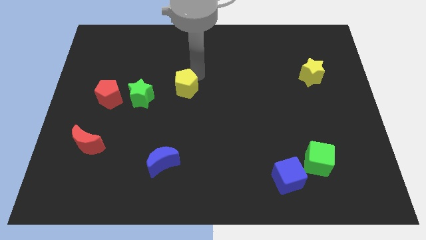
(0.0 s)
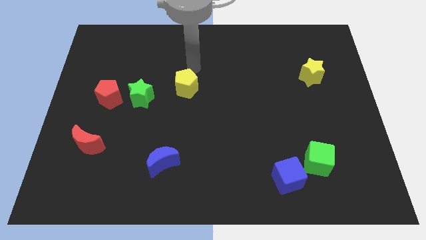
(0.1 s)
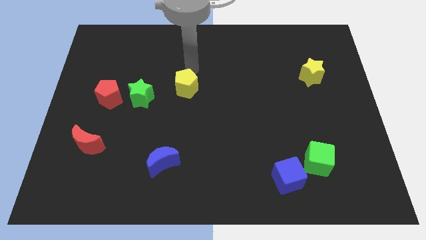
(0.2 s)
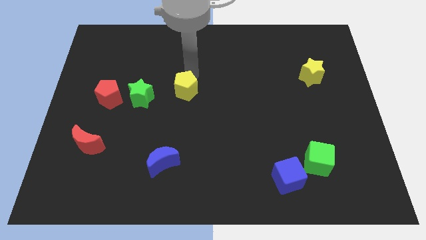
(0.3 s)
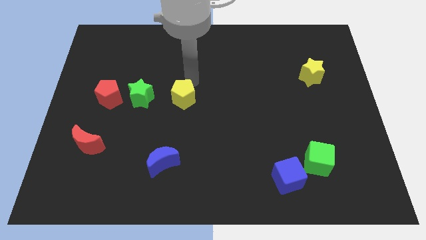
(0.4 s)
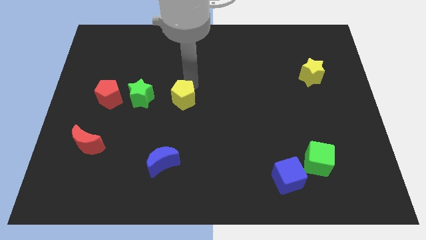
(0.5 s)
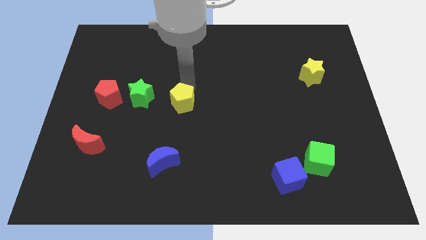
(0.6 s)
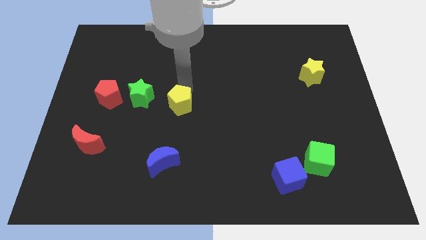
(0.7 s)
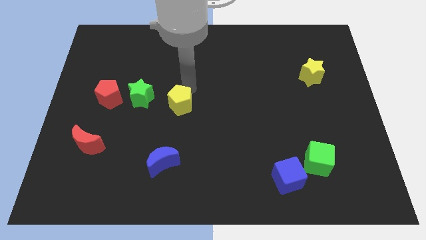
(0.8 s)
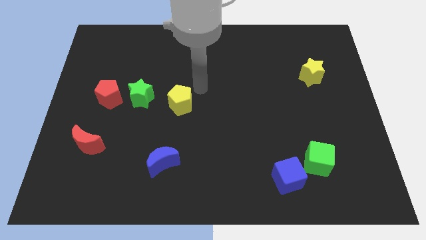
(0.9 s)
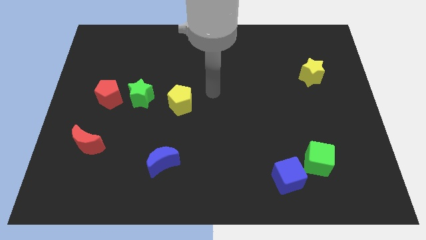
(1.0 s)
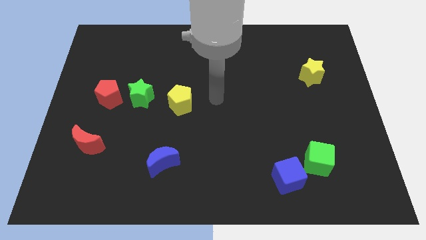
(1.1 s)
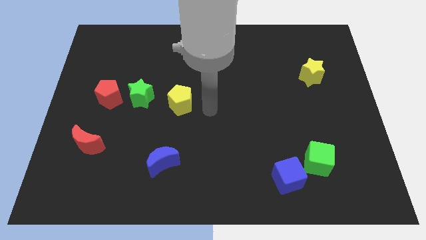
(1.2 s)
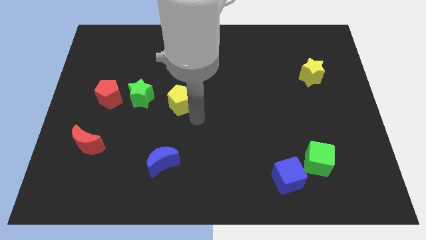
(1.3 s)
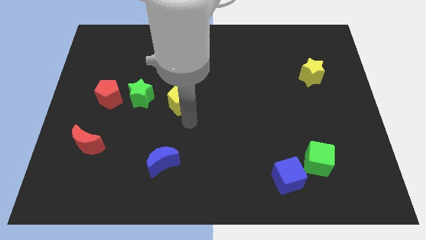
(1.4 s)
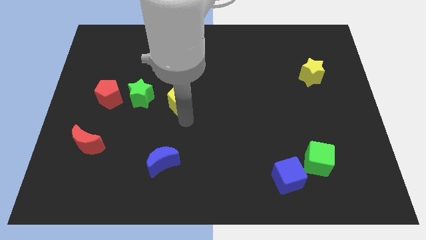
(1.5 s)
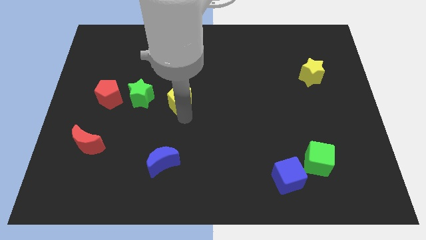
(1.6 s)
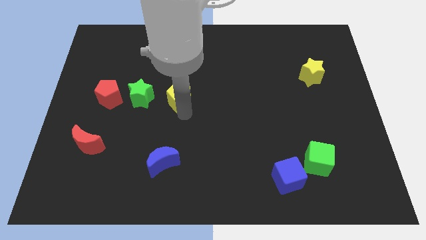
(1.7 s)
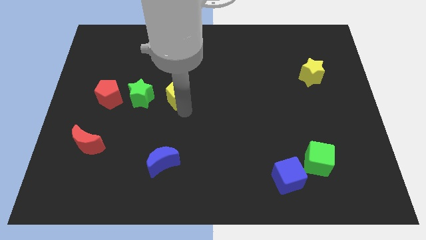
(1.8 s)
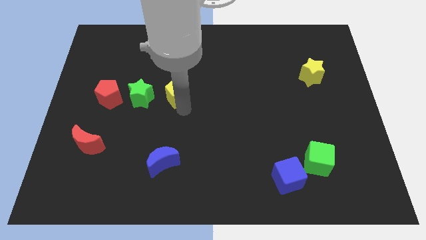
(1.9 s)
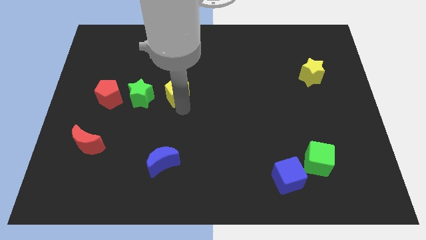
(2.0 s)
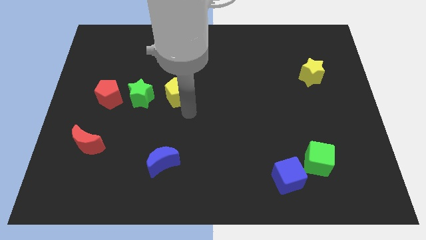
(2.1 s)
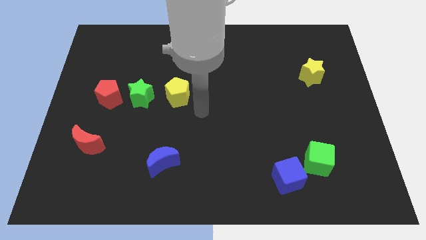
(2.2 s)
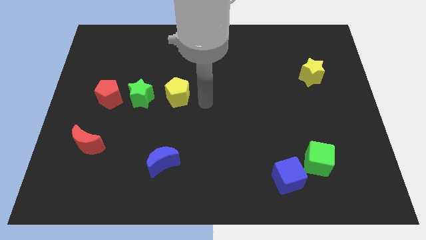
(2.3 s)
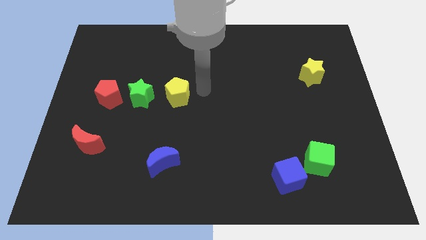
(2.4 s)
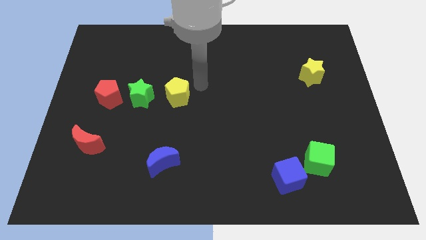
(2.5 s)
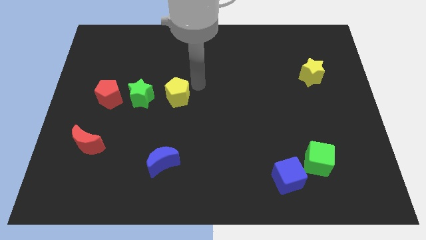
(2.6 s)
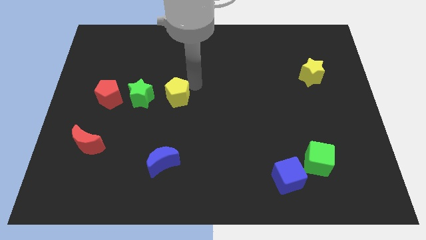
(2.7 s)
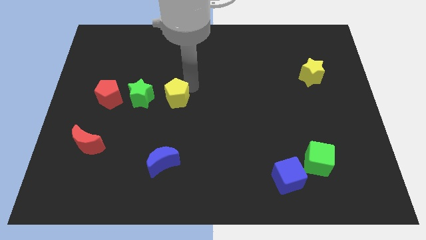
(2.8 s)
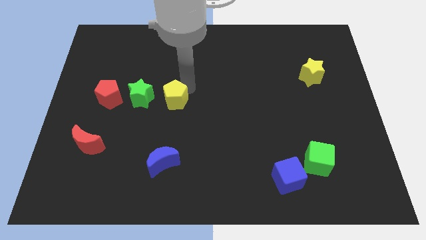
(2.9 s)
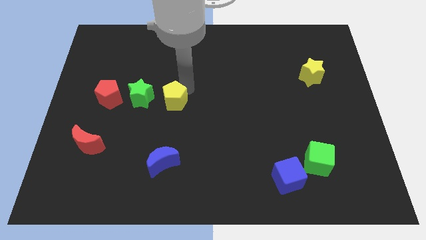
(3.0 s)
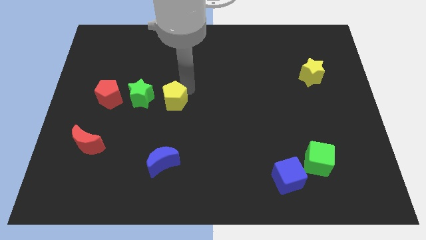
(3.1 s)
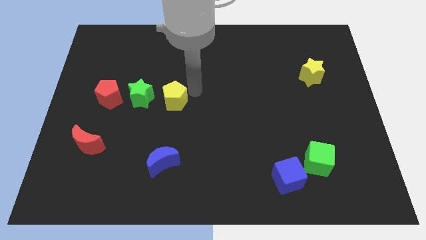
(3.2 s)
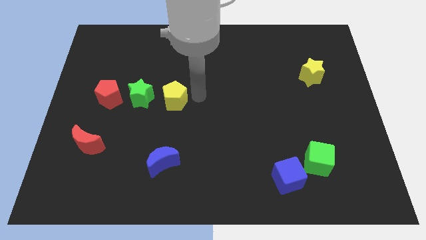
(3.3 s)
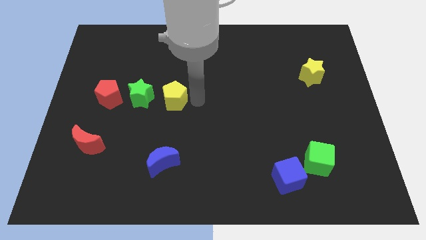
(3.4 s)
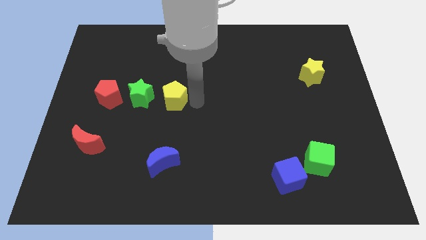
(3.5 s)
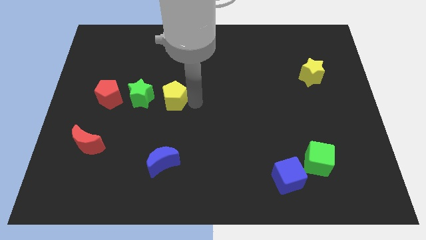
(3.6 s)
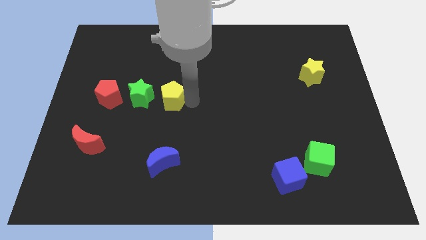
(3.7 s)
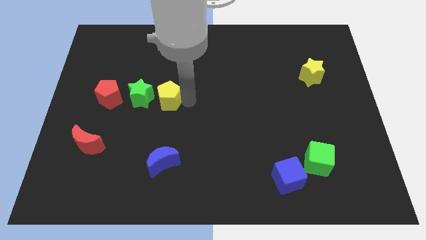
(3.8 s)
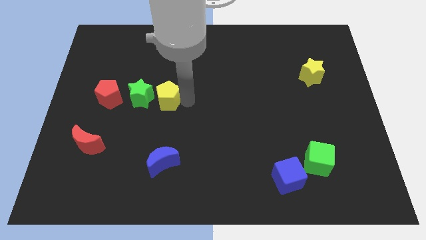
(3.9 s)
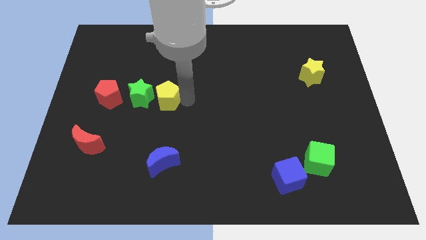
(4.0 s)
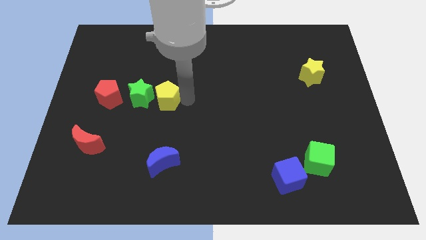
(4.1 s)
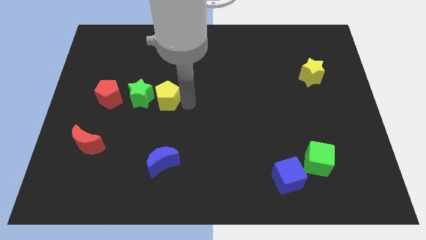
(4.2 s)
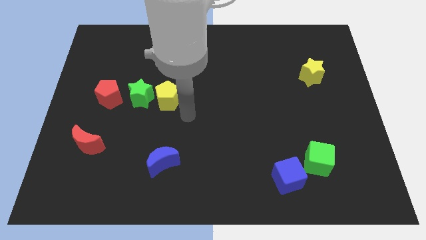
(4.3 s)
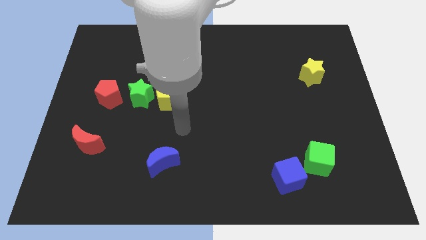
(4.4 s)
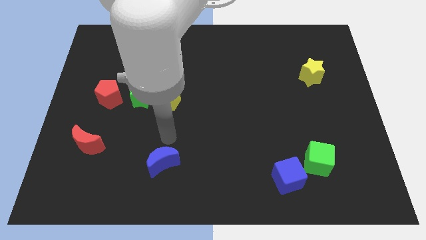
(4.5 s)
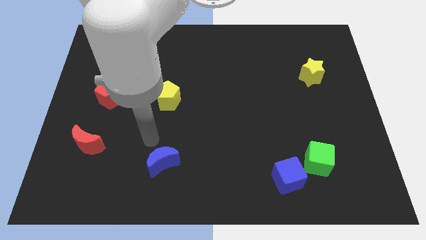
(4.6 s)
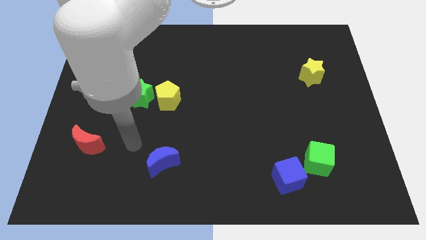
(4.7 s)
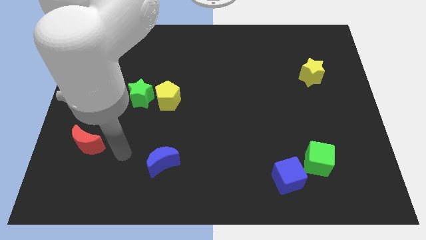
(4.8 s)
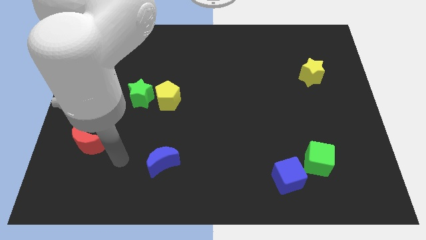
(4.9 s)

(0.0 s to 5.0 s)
move the yellow pentagon right to the green star

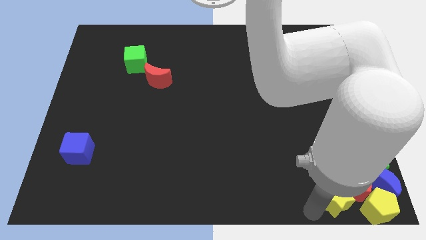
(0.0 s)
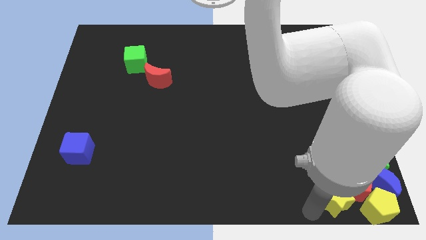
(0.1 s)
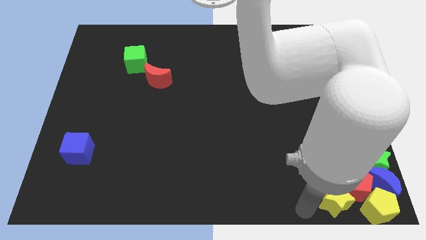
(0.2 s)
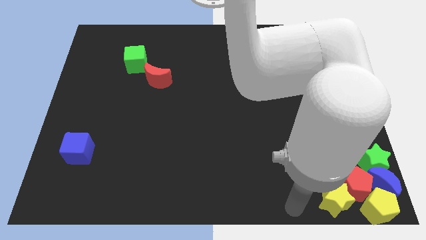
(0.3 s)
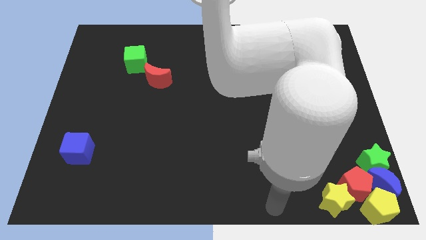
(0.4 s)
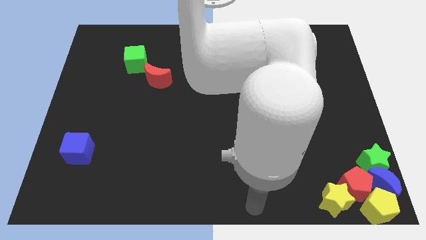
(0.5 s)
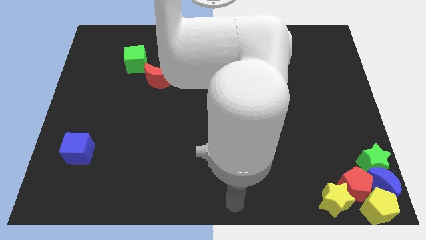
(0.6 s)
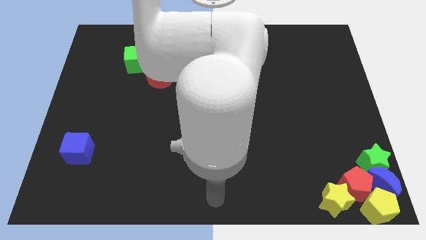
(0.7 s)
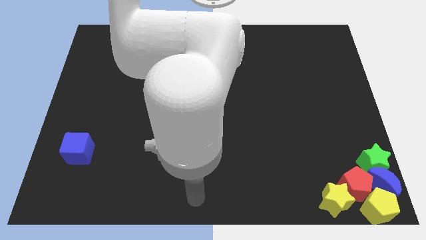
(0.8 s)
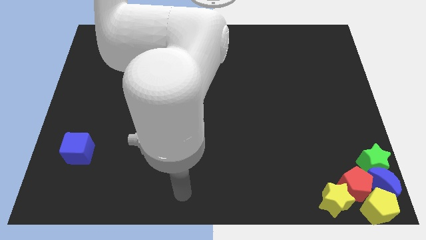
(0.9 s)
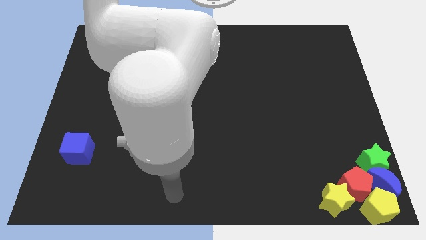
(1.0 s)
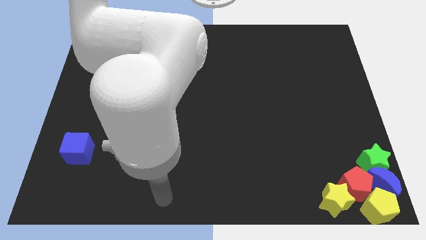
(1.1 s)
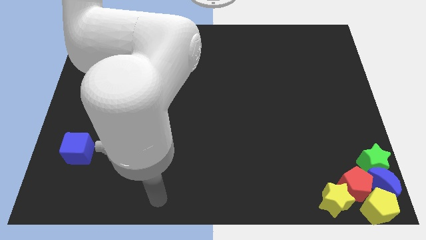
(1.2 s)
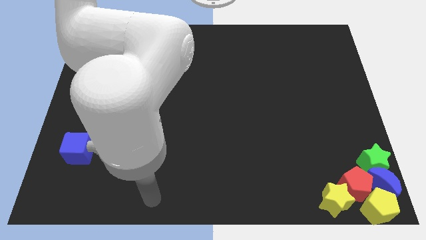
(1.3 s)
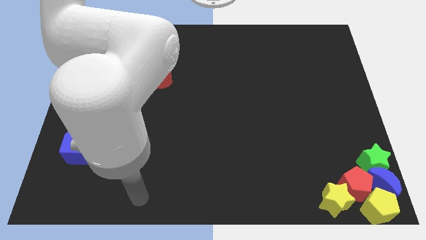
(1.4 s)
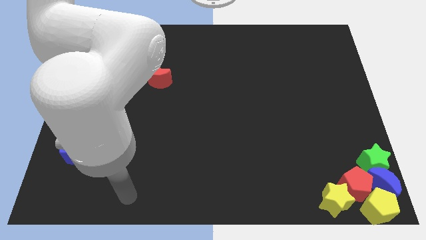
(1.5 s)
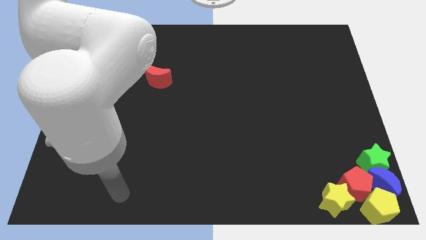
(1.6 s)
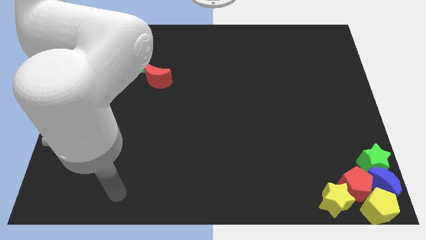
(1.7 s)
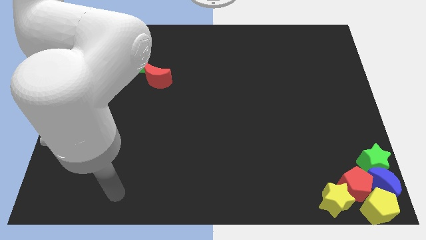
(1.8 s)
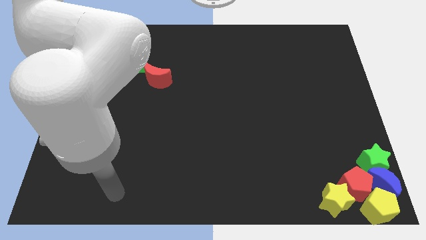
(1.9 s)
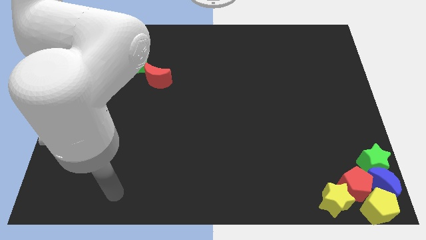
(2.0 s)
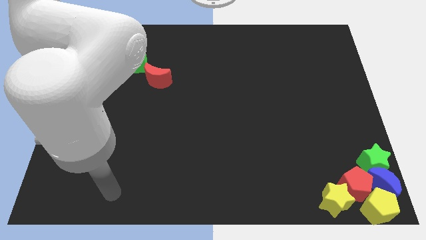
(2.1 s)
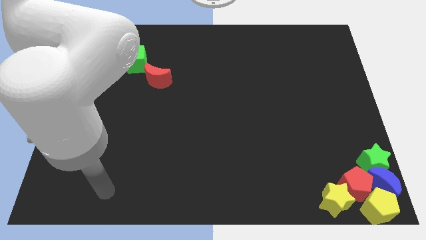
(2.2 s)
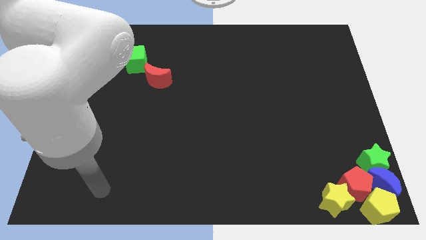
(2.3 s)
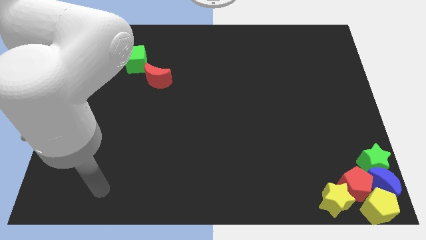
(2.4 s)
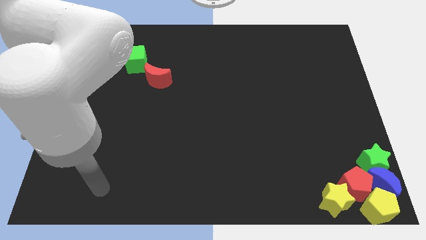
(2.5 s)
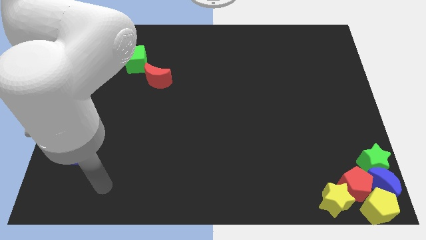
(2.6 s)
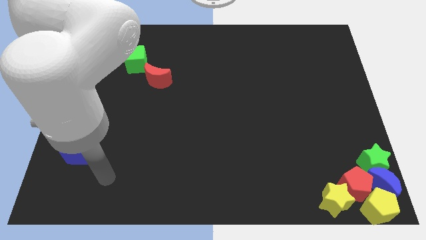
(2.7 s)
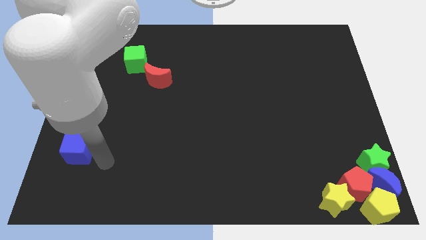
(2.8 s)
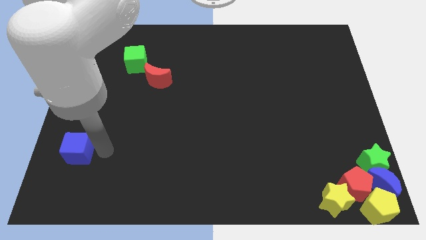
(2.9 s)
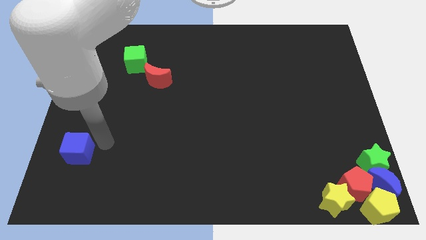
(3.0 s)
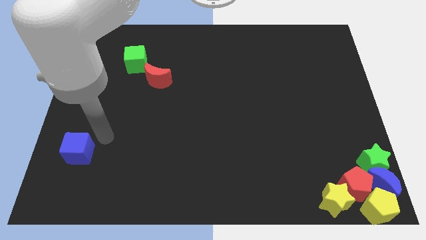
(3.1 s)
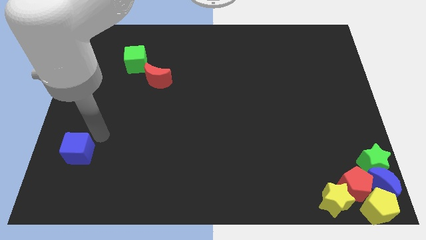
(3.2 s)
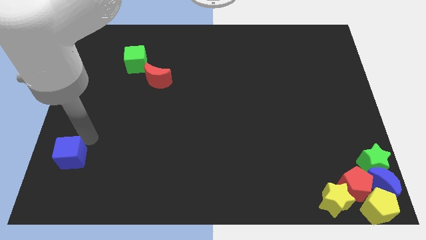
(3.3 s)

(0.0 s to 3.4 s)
place the arm near the blue cube

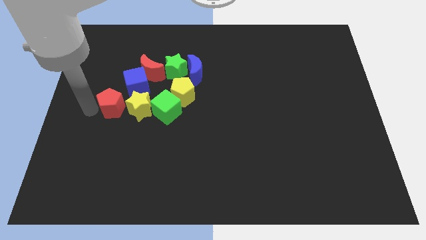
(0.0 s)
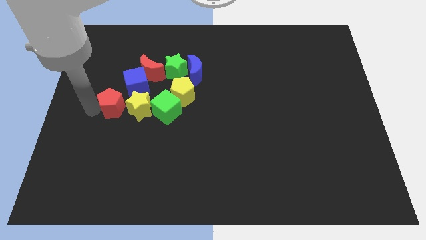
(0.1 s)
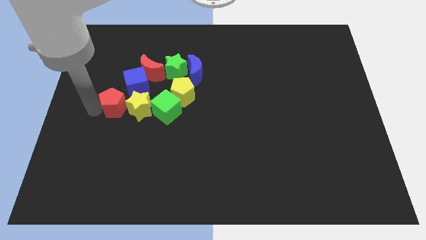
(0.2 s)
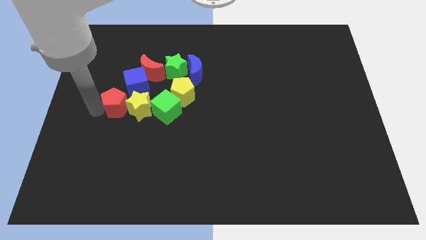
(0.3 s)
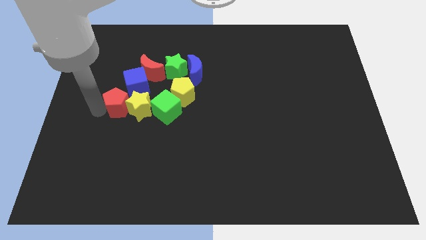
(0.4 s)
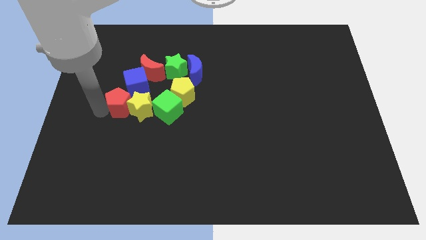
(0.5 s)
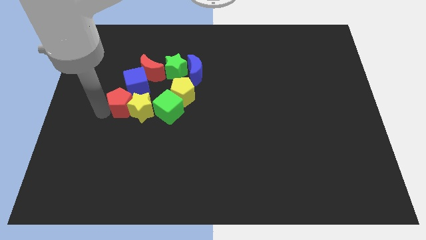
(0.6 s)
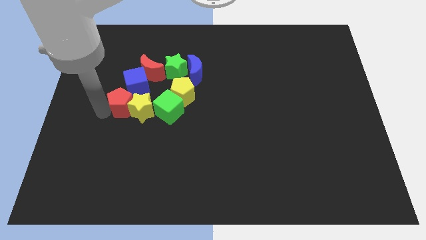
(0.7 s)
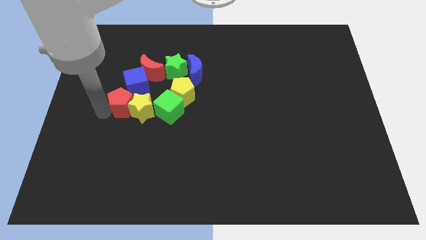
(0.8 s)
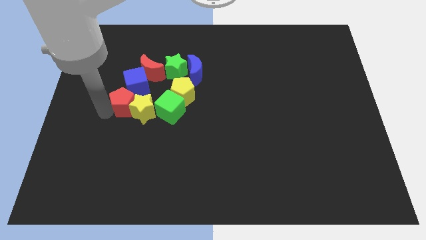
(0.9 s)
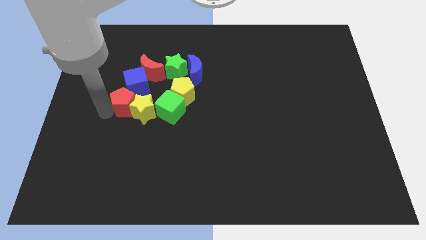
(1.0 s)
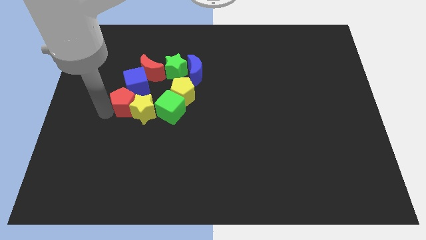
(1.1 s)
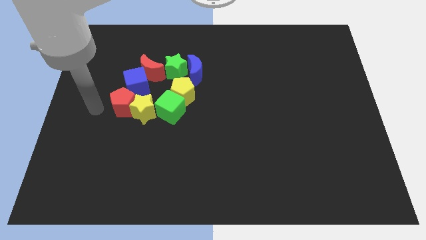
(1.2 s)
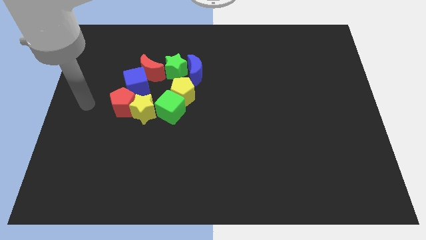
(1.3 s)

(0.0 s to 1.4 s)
move the red pentagon into the left side of the yellow star
